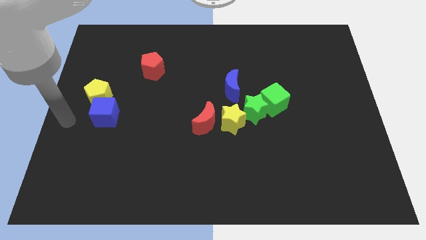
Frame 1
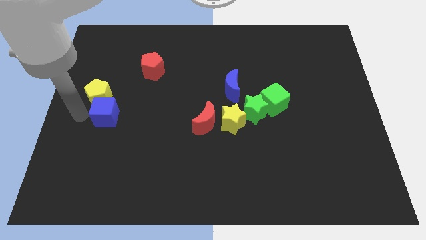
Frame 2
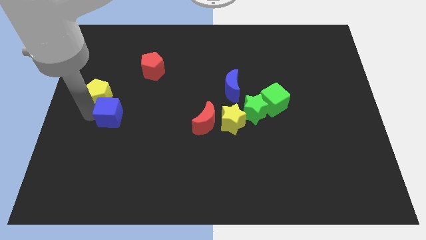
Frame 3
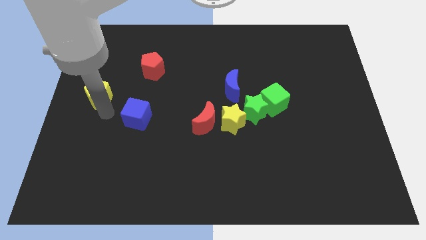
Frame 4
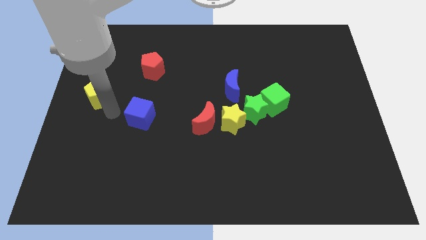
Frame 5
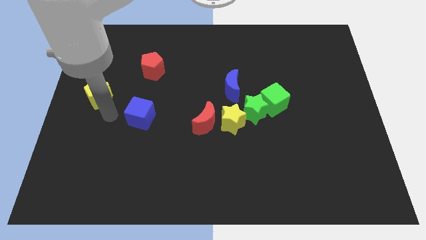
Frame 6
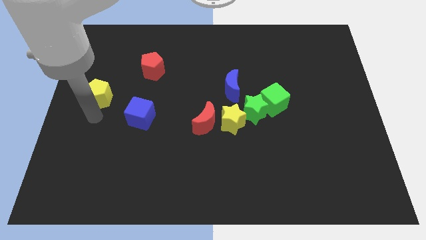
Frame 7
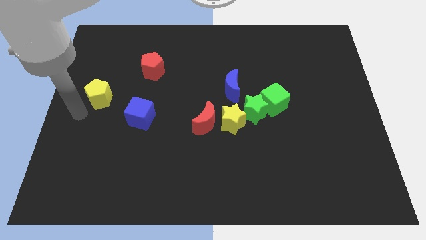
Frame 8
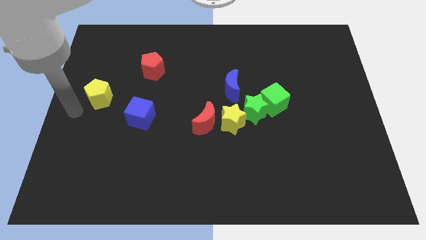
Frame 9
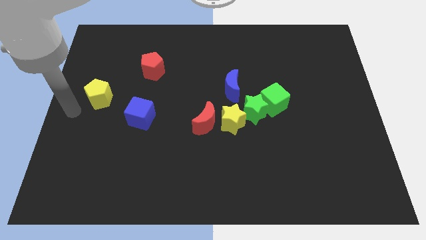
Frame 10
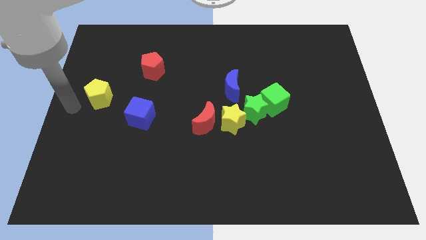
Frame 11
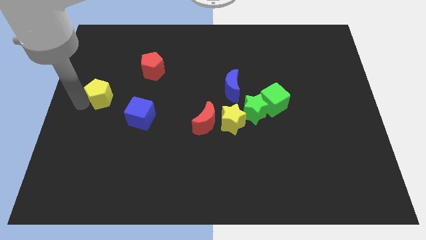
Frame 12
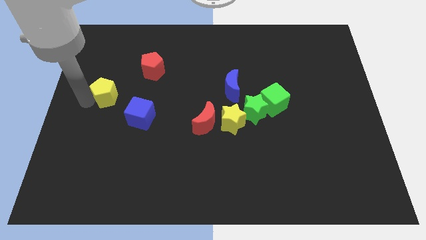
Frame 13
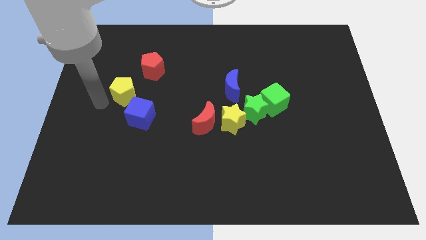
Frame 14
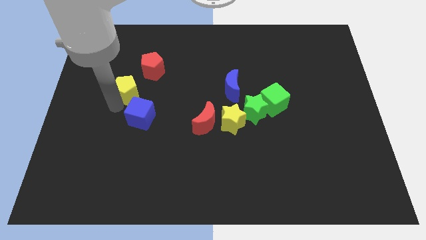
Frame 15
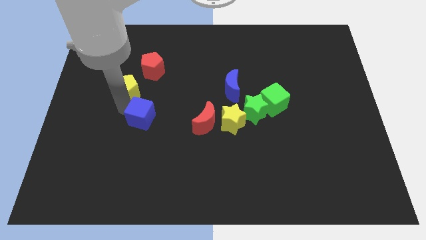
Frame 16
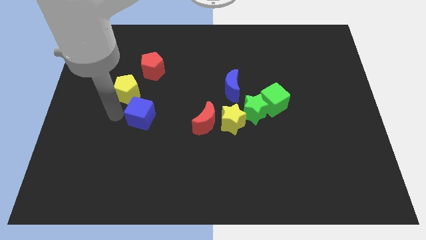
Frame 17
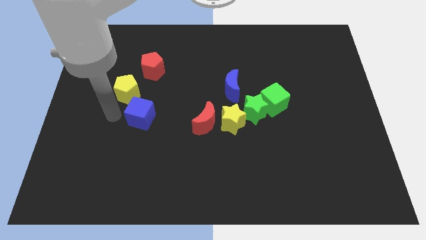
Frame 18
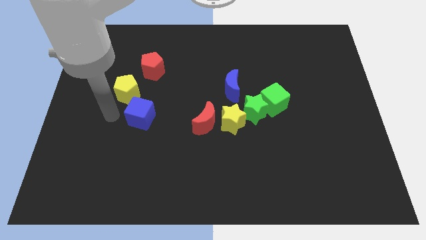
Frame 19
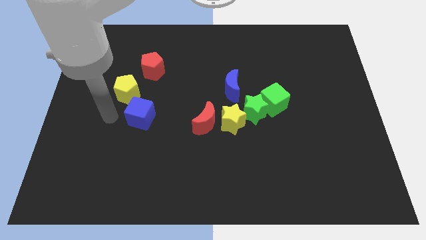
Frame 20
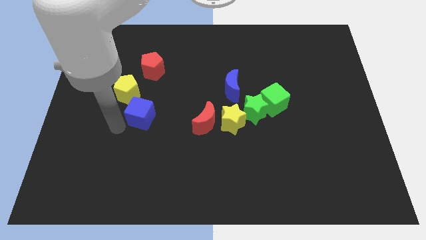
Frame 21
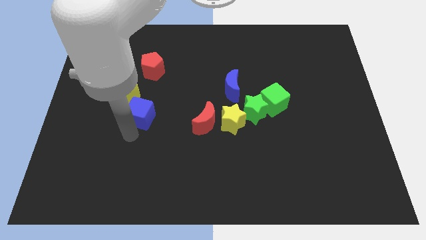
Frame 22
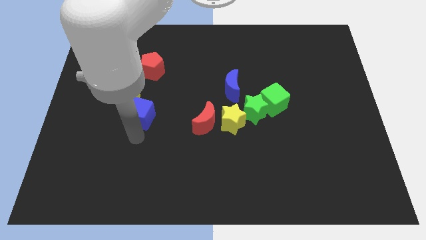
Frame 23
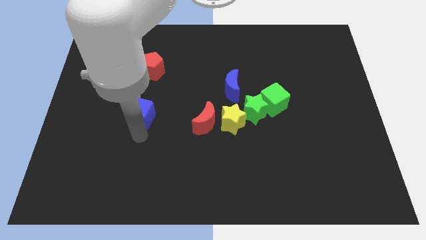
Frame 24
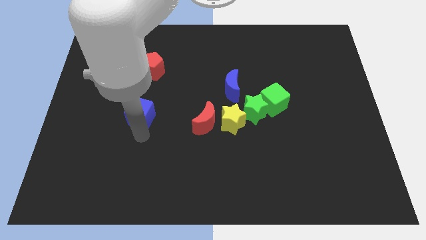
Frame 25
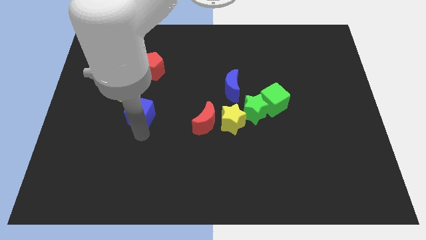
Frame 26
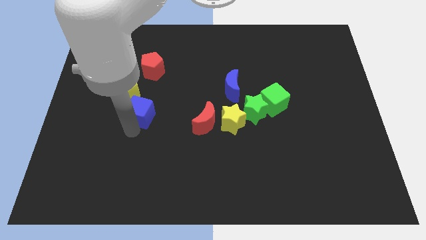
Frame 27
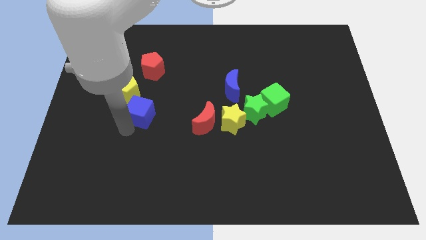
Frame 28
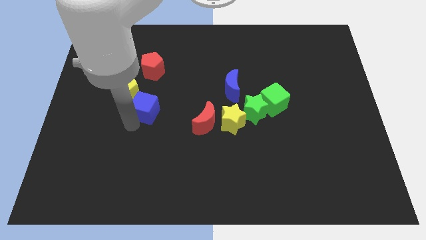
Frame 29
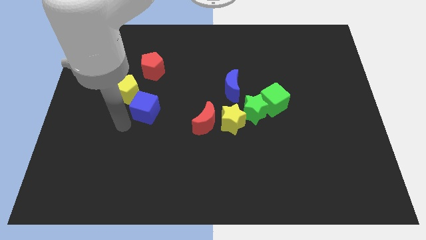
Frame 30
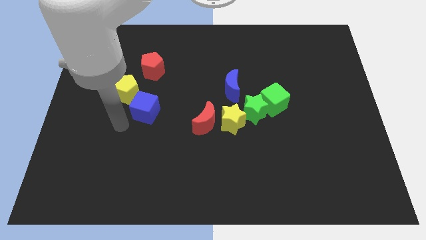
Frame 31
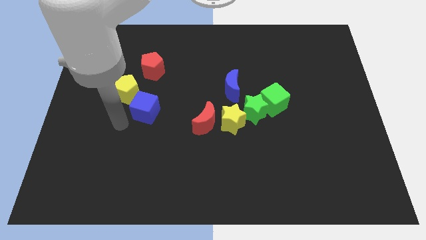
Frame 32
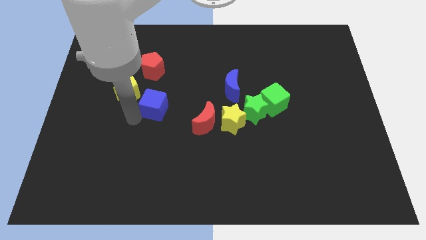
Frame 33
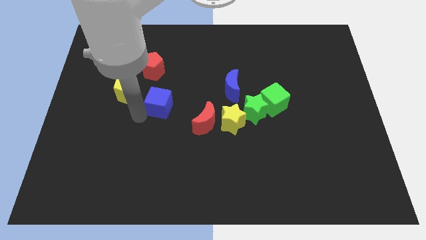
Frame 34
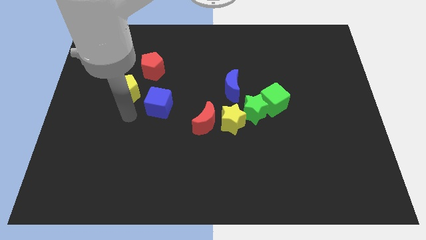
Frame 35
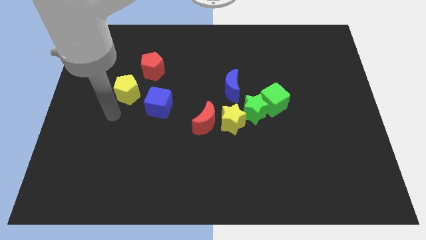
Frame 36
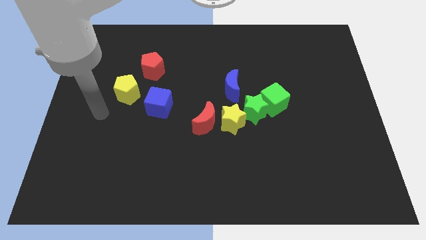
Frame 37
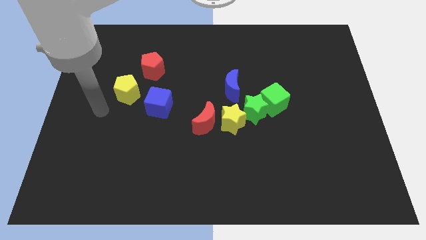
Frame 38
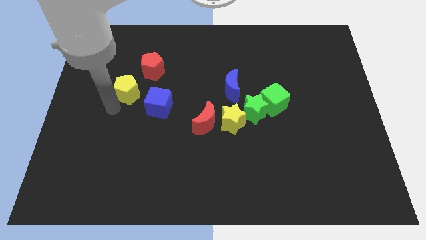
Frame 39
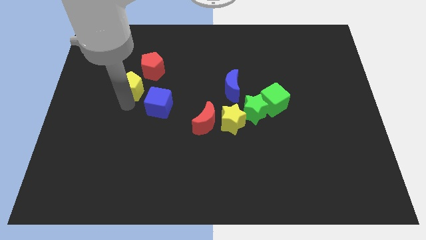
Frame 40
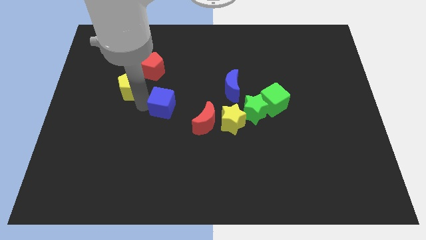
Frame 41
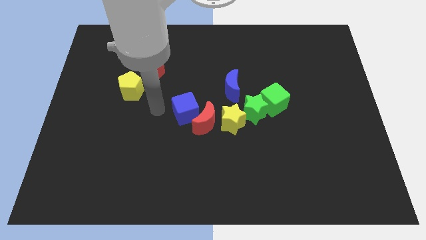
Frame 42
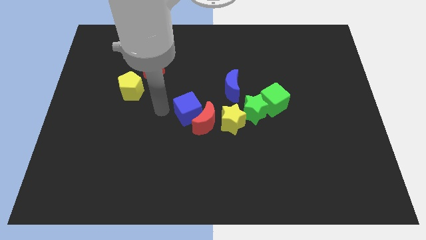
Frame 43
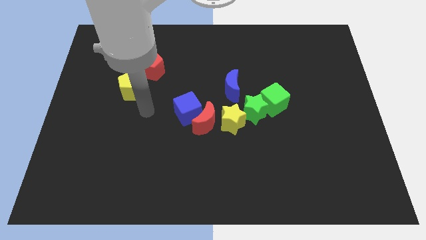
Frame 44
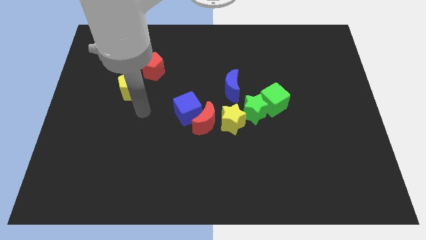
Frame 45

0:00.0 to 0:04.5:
move the blue cube into the left side of the red crescent

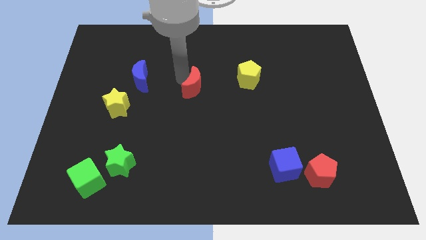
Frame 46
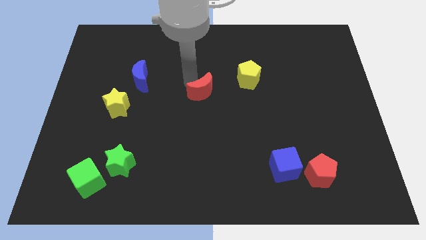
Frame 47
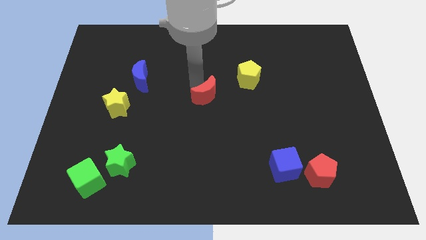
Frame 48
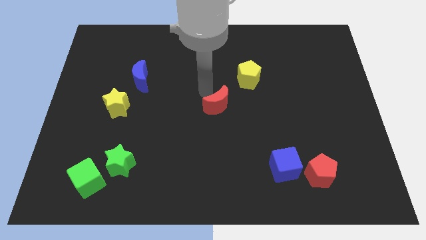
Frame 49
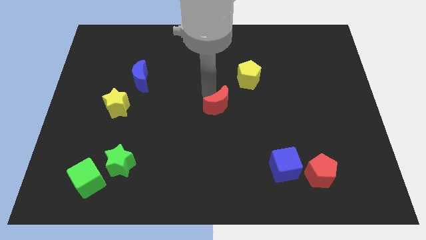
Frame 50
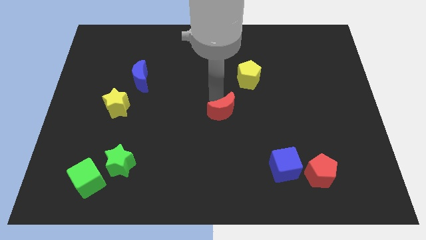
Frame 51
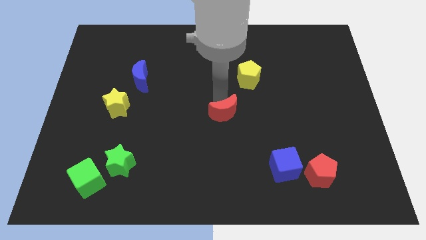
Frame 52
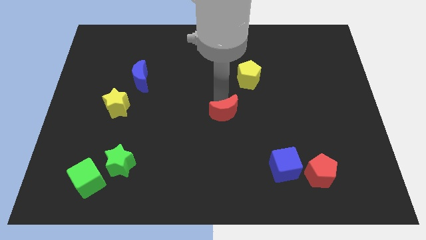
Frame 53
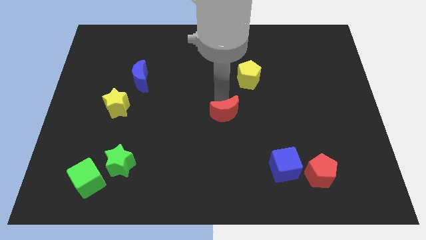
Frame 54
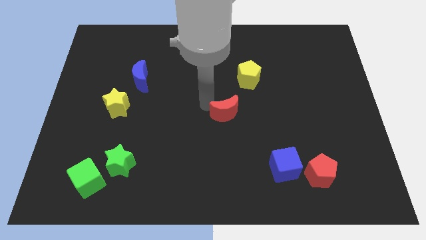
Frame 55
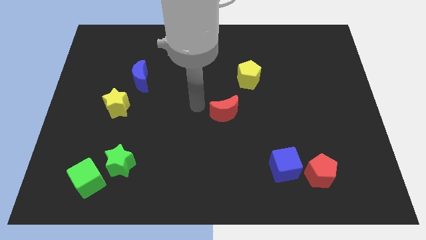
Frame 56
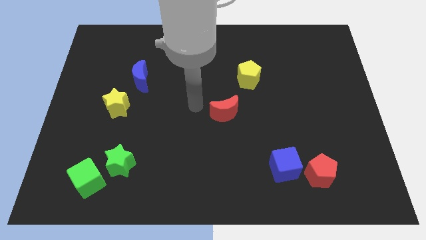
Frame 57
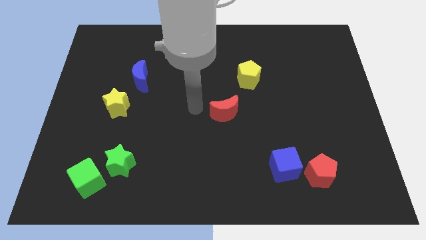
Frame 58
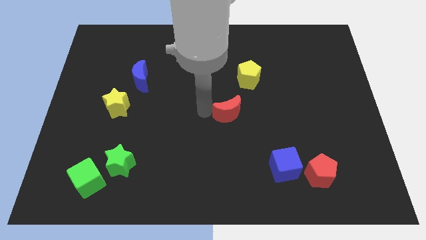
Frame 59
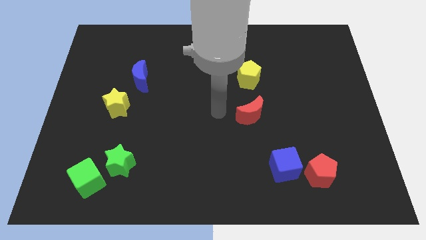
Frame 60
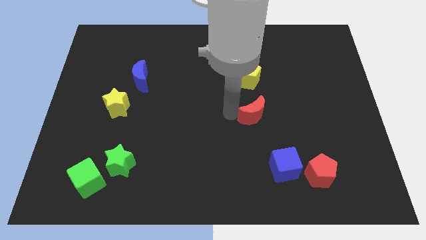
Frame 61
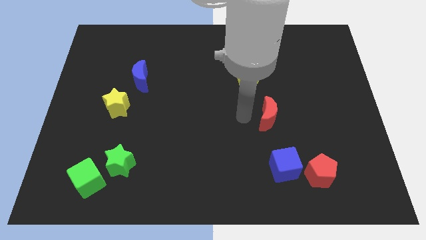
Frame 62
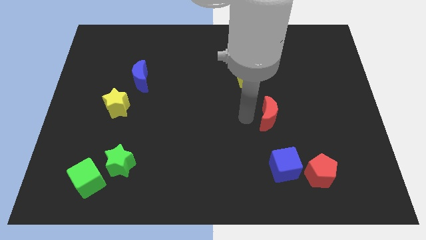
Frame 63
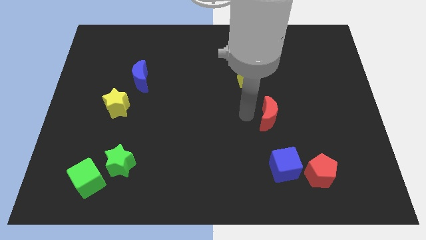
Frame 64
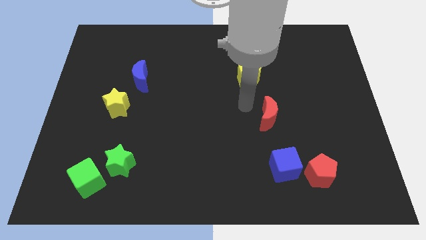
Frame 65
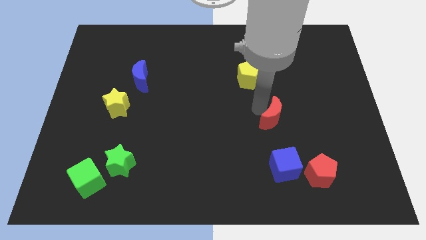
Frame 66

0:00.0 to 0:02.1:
move the red moon on top of blue cube

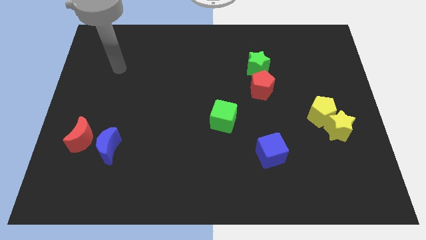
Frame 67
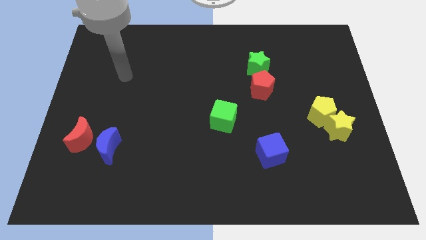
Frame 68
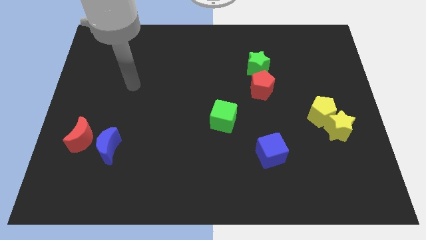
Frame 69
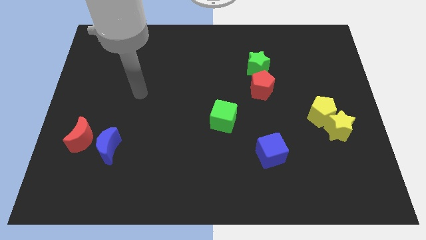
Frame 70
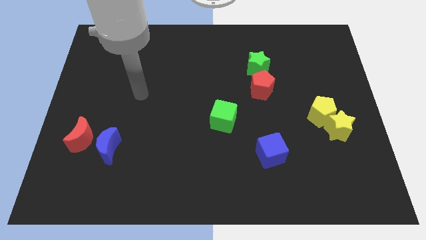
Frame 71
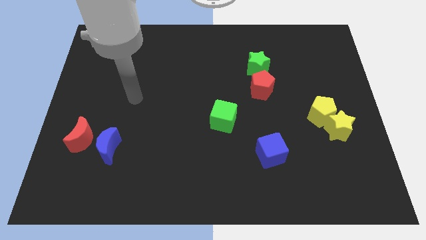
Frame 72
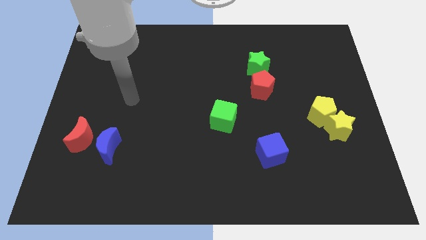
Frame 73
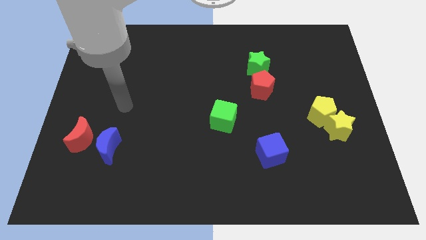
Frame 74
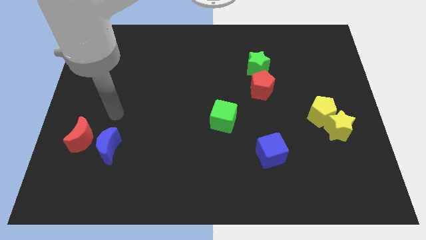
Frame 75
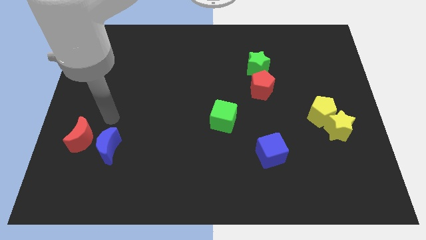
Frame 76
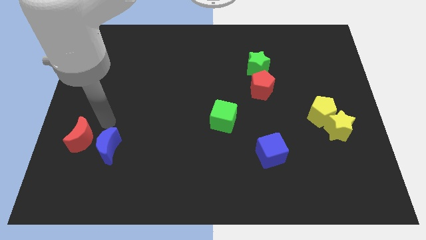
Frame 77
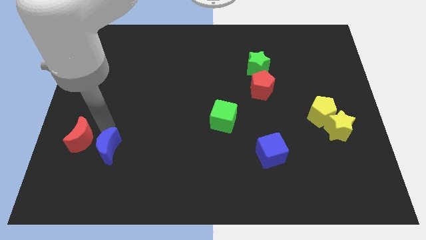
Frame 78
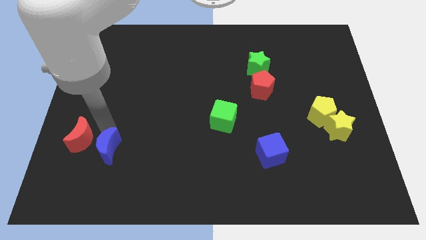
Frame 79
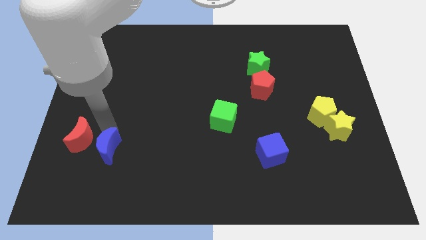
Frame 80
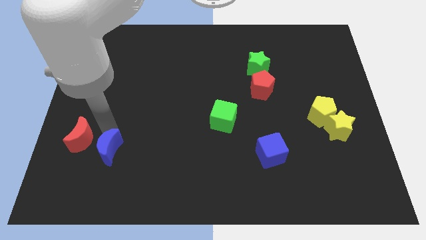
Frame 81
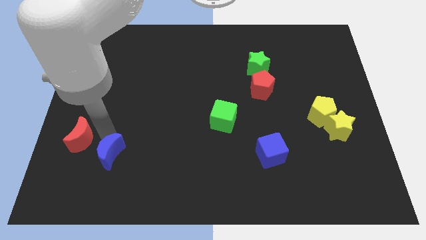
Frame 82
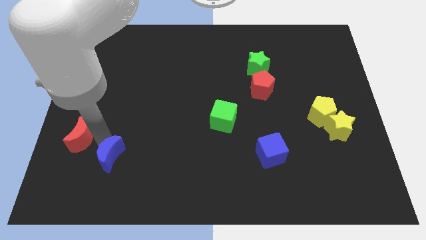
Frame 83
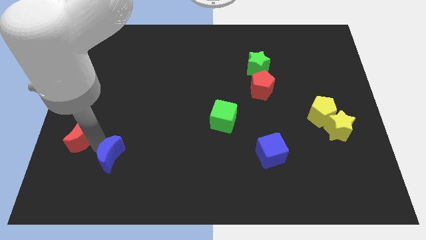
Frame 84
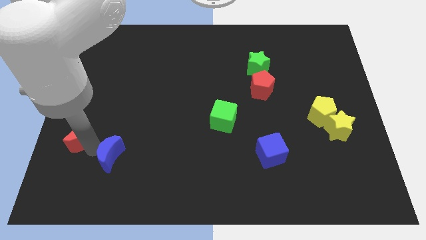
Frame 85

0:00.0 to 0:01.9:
place your hand in between the red moon and blue semicircle

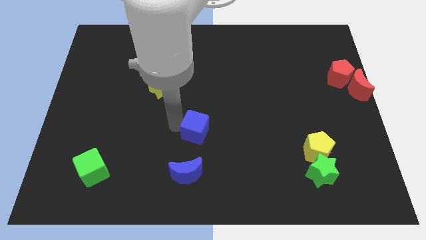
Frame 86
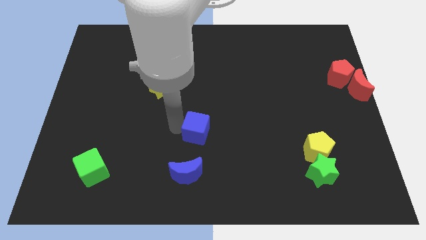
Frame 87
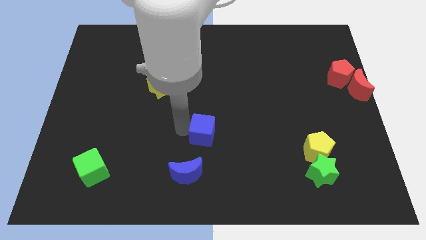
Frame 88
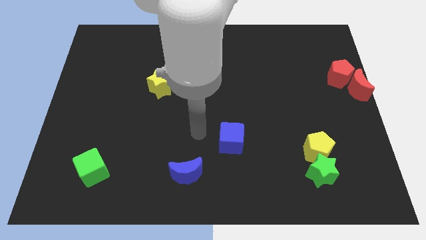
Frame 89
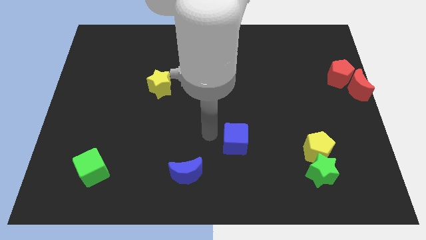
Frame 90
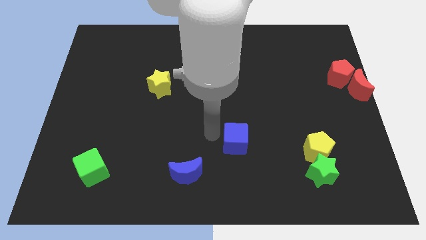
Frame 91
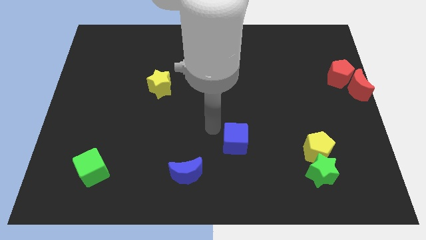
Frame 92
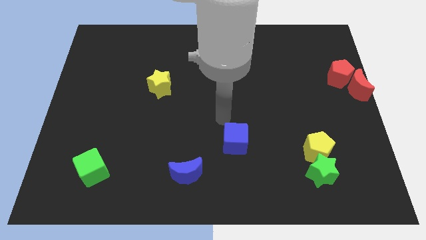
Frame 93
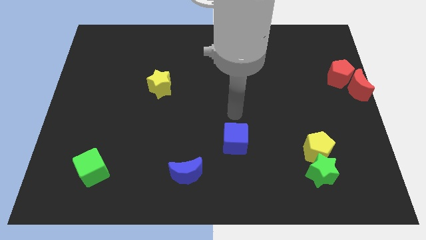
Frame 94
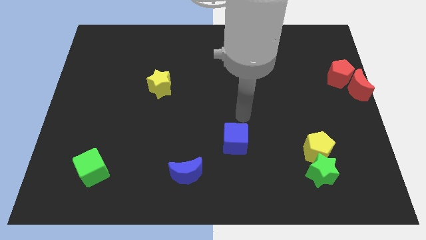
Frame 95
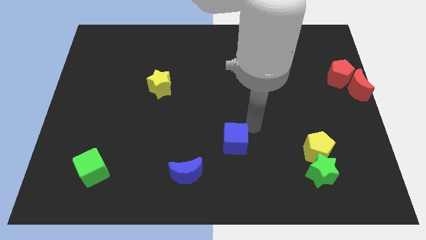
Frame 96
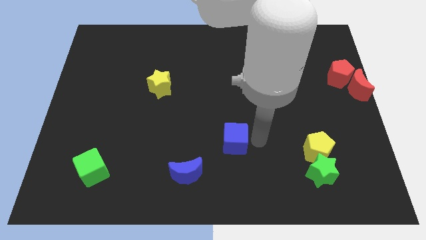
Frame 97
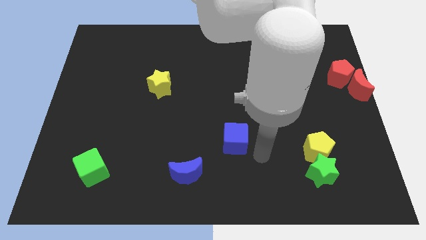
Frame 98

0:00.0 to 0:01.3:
push the blue cube diagonally top right to the blue moon
